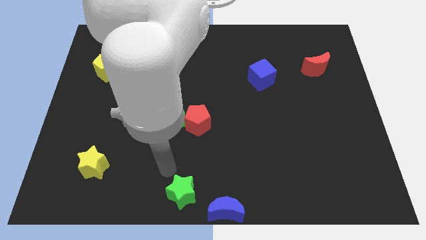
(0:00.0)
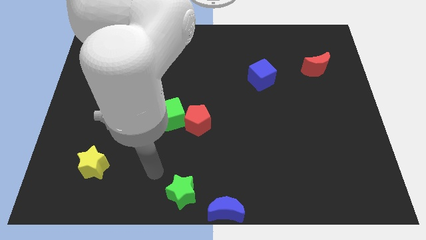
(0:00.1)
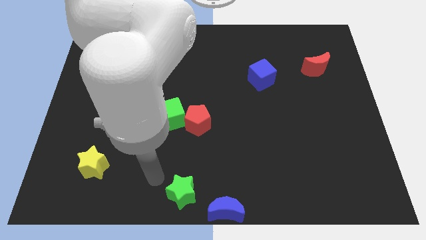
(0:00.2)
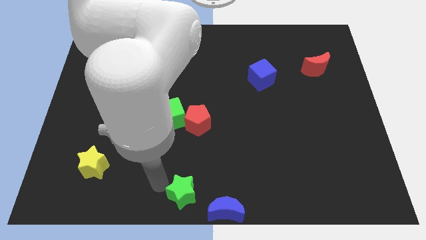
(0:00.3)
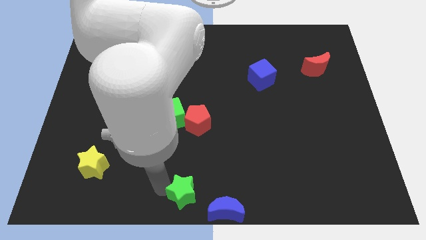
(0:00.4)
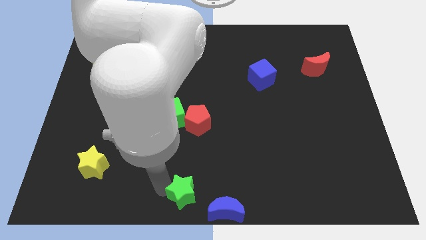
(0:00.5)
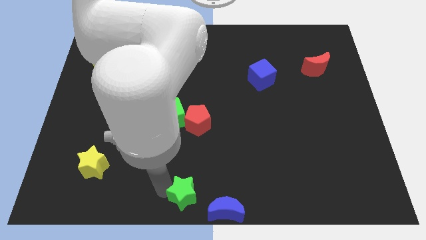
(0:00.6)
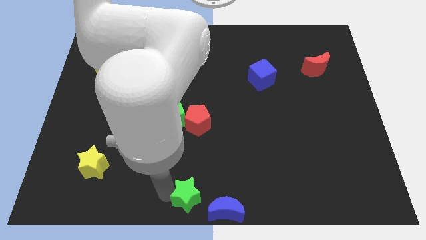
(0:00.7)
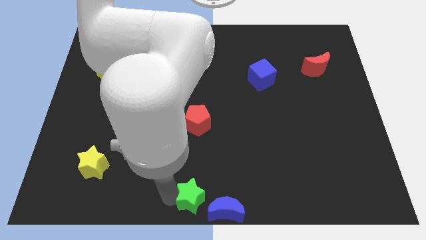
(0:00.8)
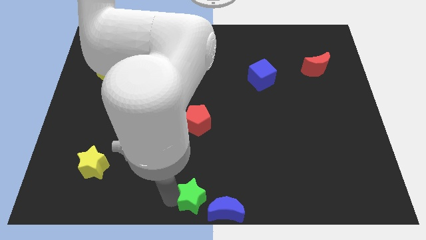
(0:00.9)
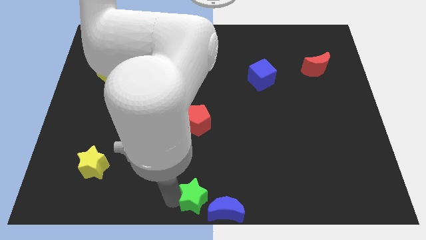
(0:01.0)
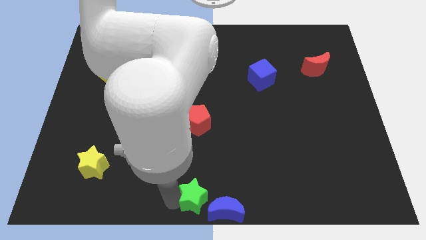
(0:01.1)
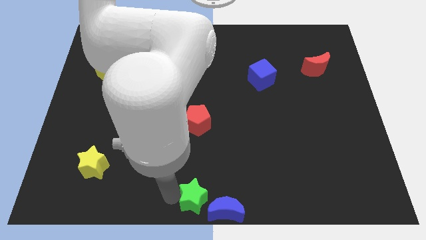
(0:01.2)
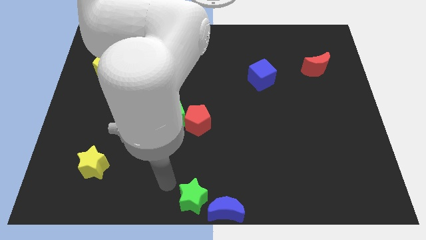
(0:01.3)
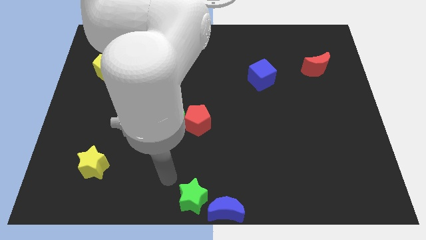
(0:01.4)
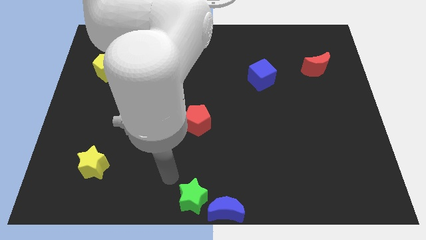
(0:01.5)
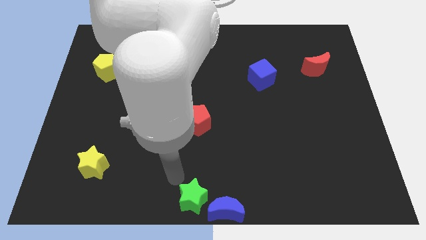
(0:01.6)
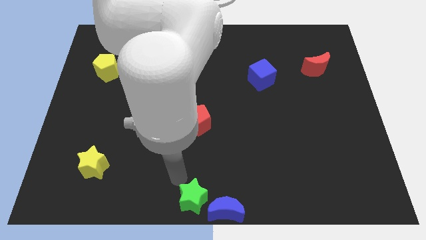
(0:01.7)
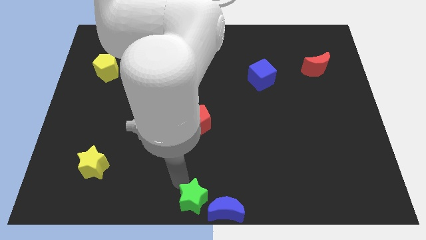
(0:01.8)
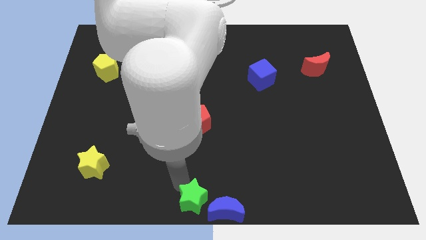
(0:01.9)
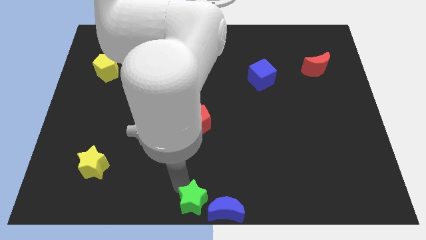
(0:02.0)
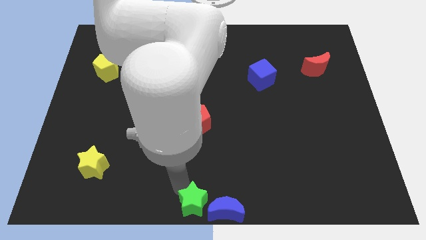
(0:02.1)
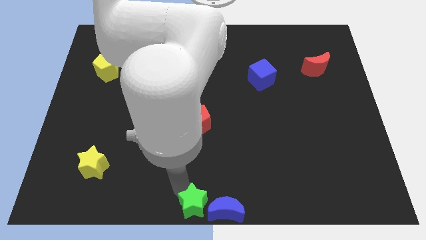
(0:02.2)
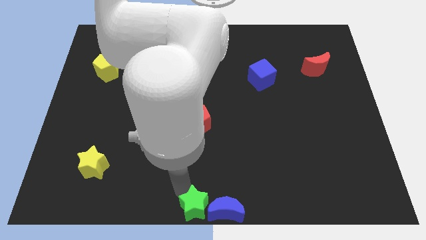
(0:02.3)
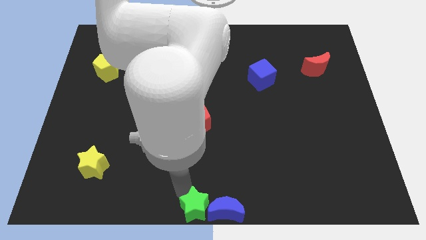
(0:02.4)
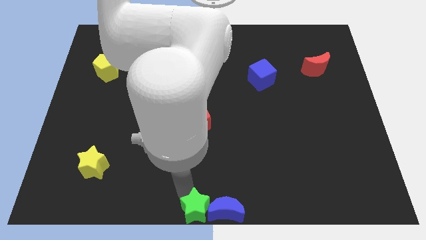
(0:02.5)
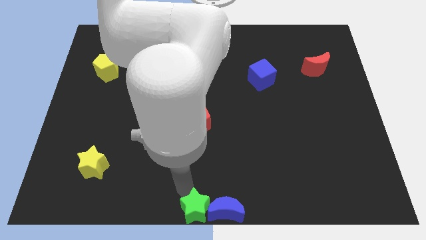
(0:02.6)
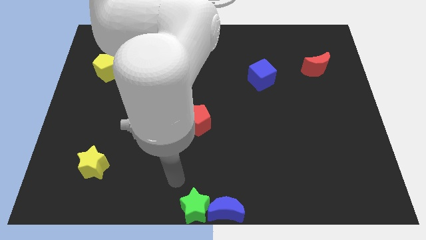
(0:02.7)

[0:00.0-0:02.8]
push the green star into the blue crescent to the left

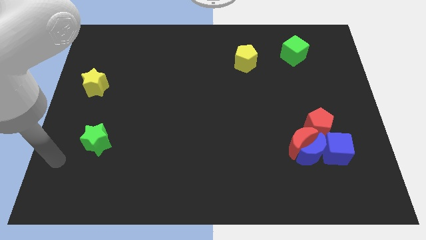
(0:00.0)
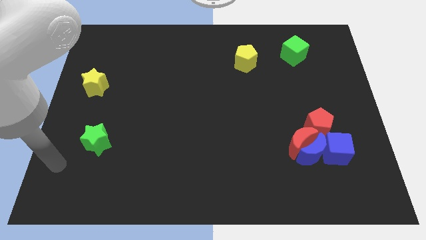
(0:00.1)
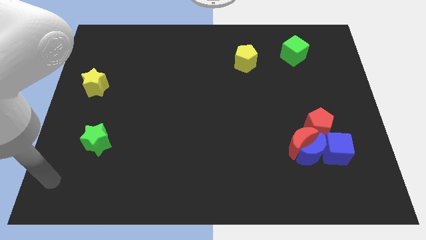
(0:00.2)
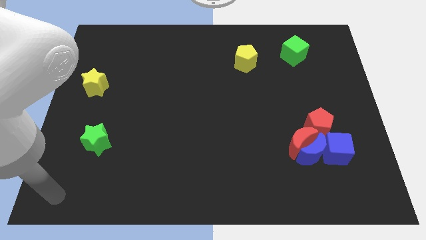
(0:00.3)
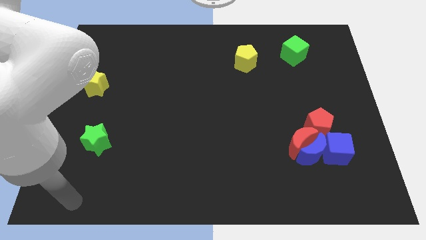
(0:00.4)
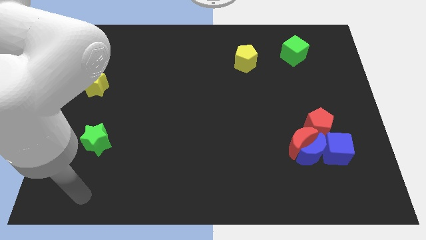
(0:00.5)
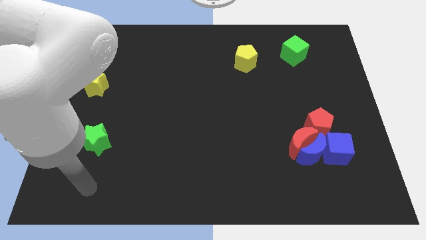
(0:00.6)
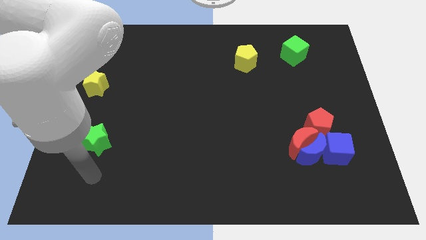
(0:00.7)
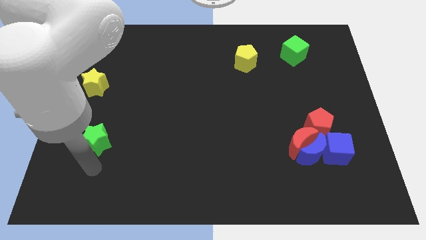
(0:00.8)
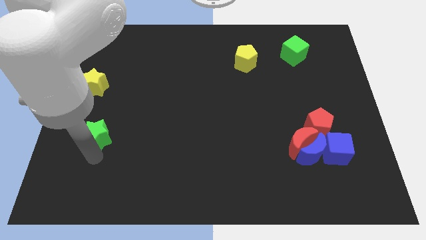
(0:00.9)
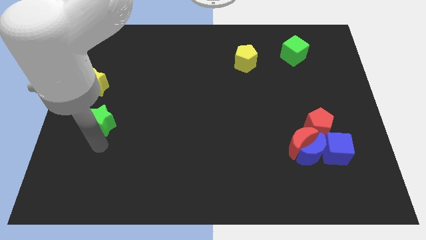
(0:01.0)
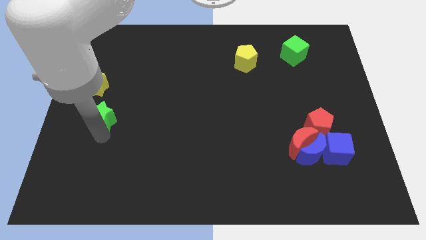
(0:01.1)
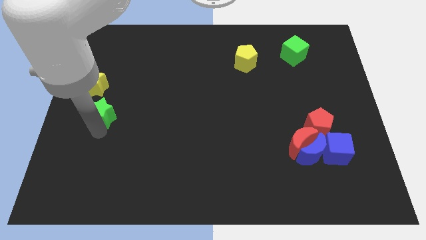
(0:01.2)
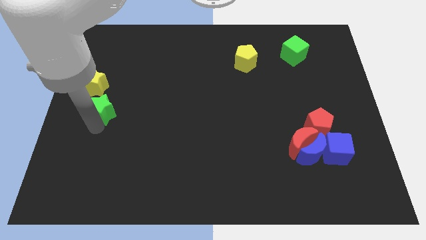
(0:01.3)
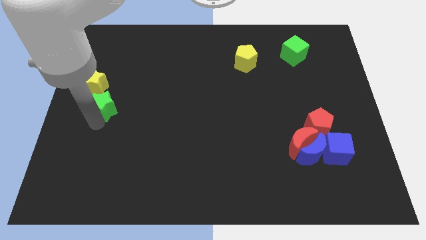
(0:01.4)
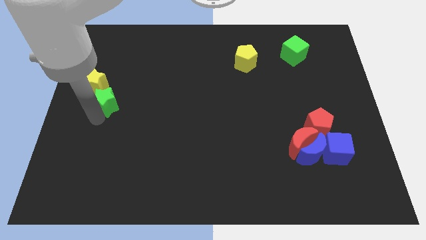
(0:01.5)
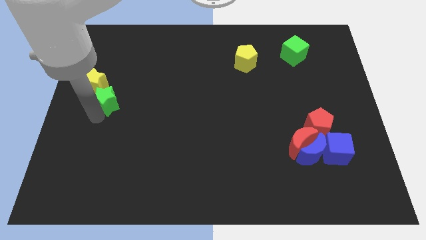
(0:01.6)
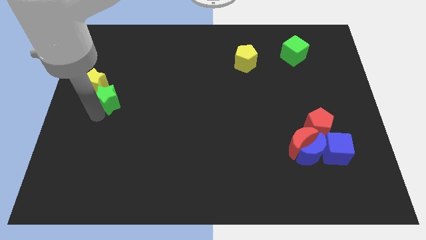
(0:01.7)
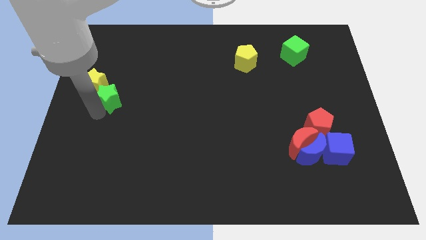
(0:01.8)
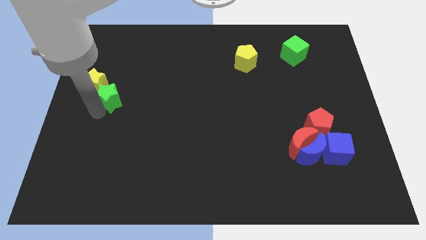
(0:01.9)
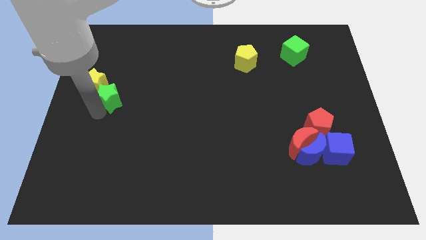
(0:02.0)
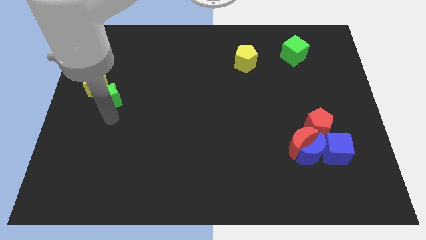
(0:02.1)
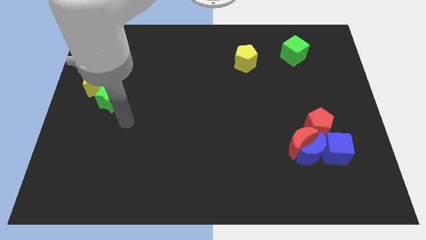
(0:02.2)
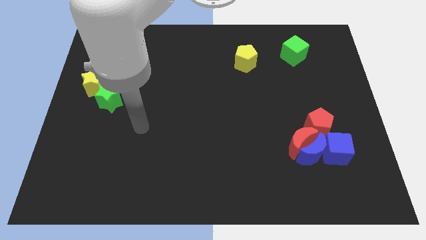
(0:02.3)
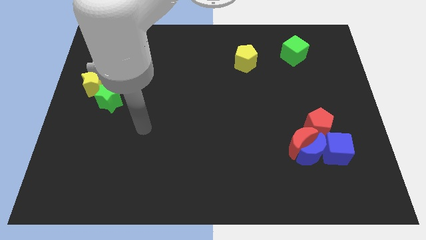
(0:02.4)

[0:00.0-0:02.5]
place the green star into yellow star diagonally

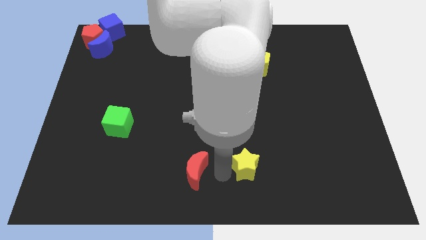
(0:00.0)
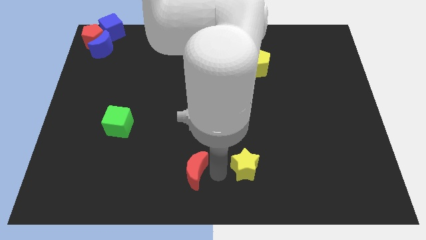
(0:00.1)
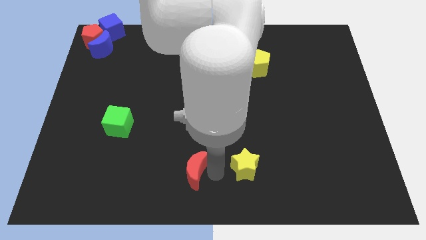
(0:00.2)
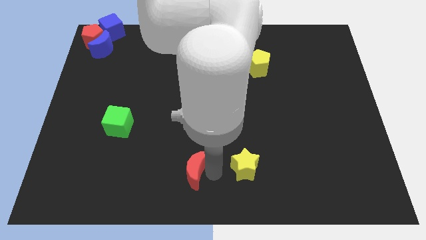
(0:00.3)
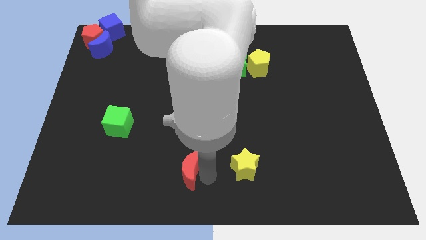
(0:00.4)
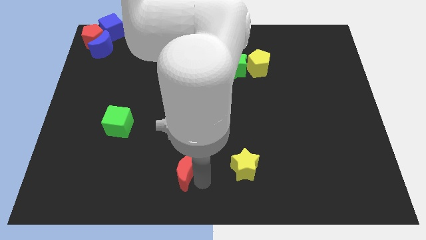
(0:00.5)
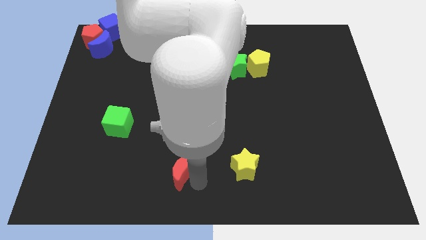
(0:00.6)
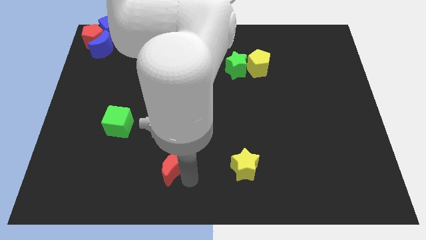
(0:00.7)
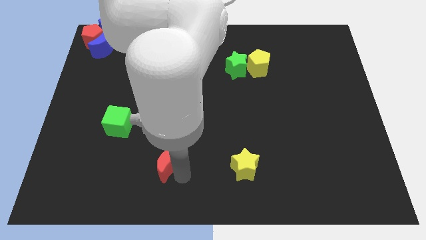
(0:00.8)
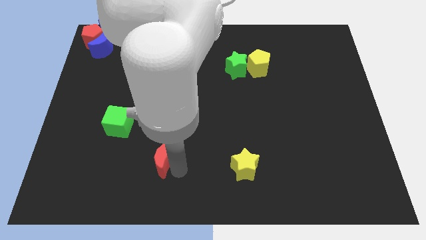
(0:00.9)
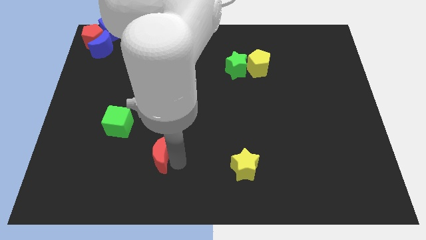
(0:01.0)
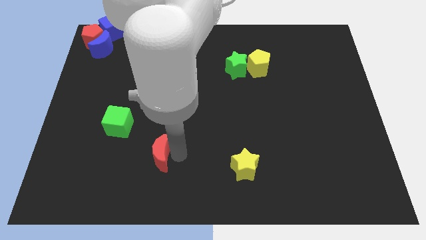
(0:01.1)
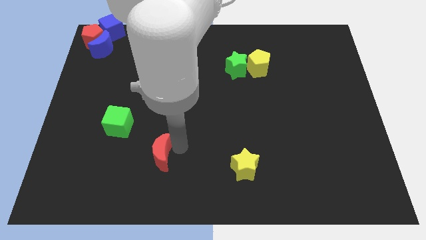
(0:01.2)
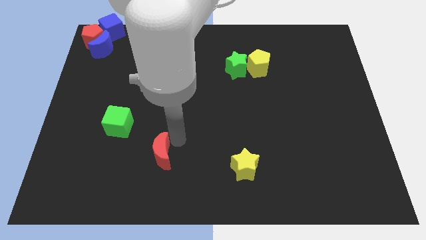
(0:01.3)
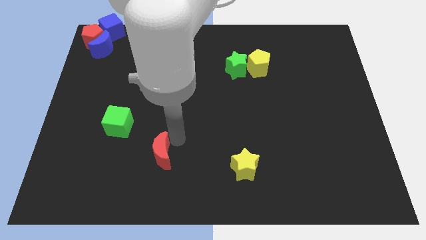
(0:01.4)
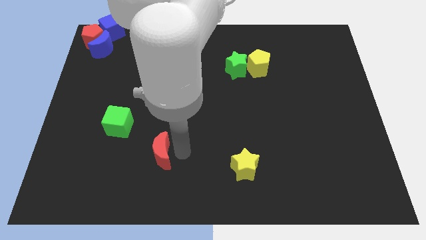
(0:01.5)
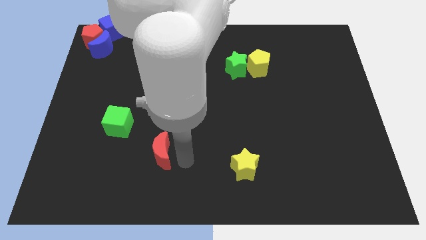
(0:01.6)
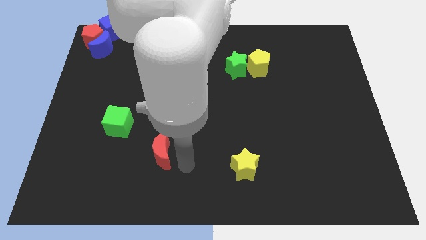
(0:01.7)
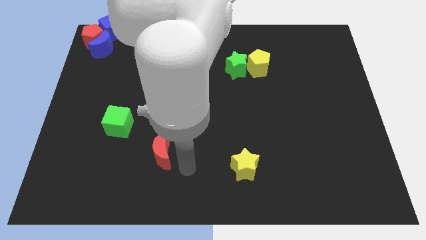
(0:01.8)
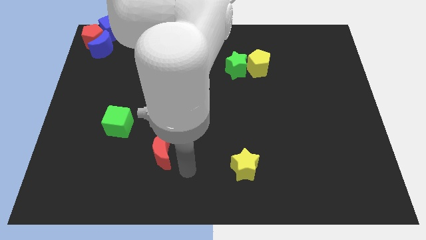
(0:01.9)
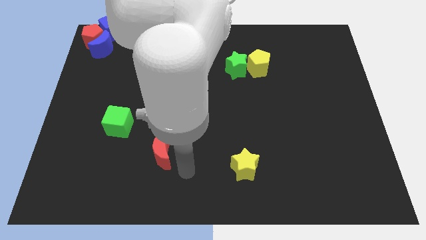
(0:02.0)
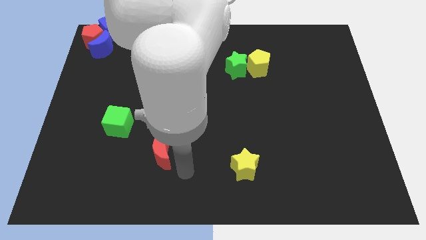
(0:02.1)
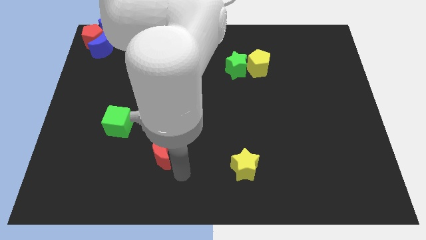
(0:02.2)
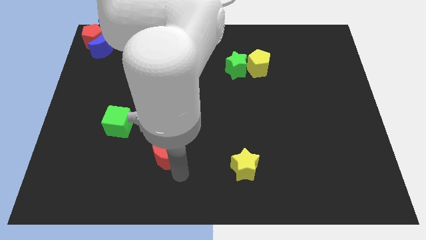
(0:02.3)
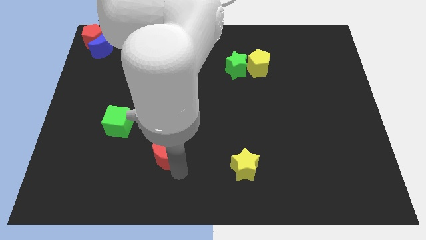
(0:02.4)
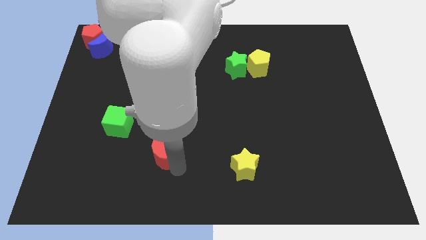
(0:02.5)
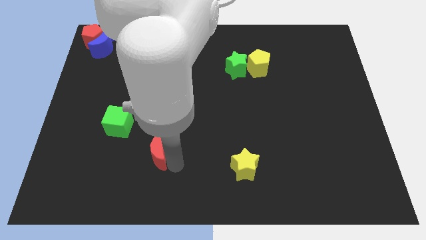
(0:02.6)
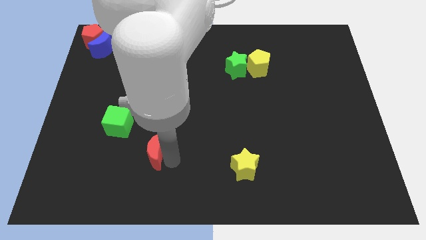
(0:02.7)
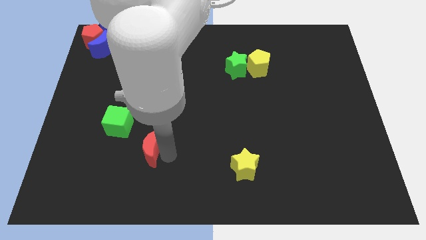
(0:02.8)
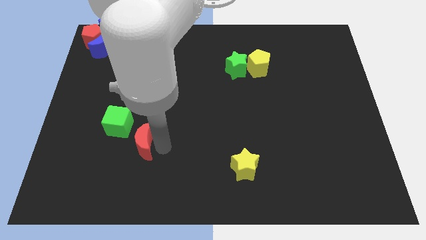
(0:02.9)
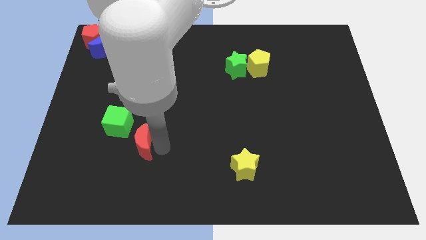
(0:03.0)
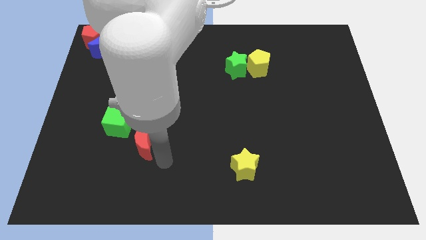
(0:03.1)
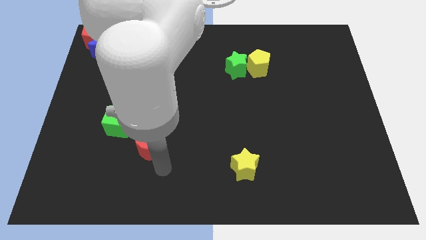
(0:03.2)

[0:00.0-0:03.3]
move the red moon to the right of the green cube diagonally

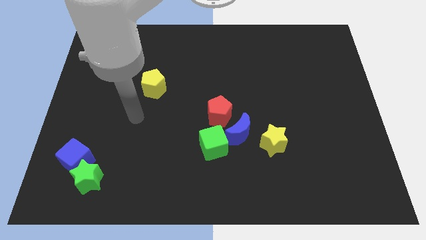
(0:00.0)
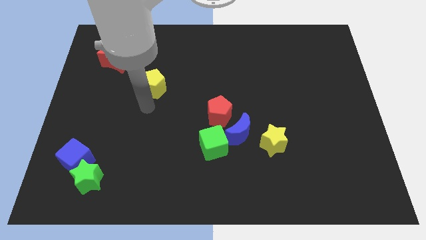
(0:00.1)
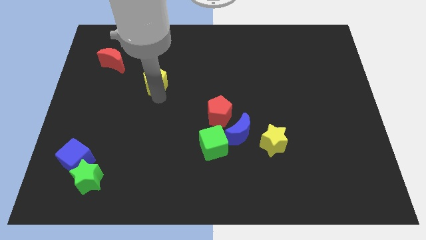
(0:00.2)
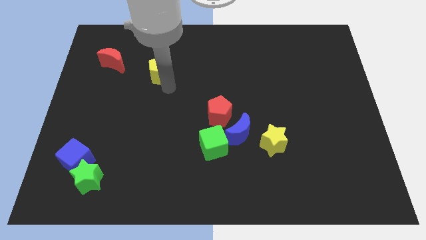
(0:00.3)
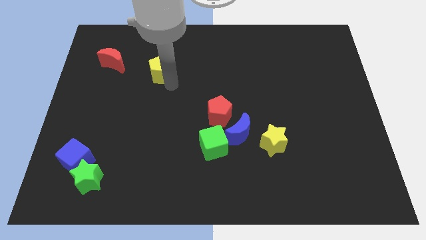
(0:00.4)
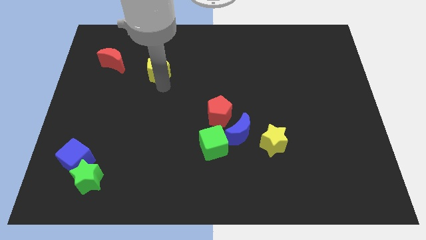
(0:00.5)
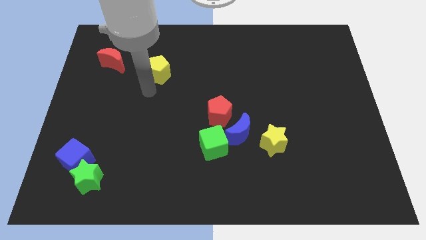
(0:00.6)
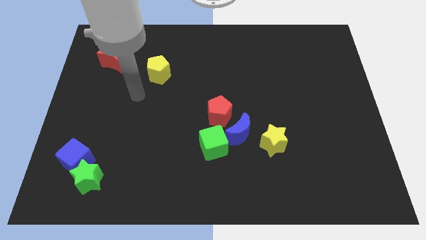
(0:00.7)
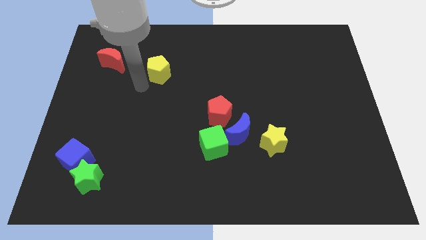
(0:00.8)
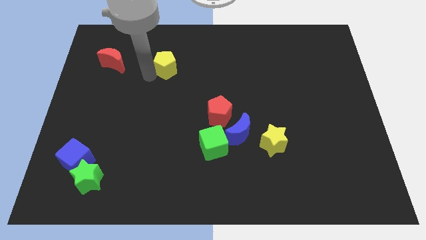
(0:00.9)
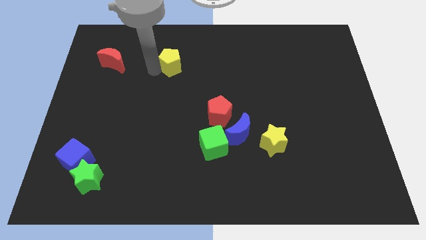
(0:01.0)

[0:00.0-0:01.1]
put the yellow pentagon horizontally to the right of the red crescent
